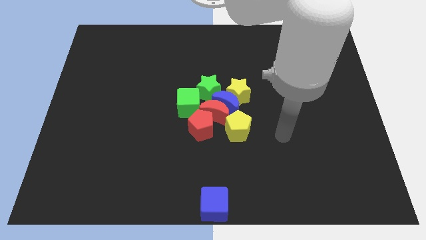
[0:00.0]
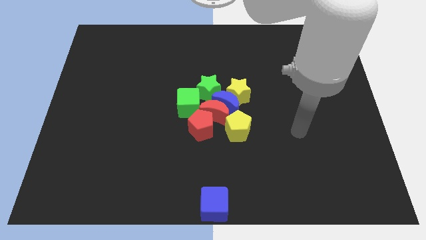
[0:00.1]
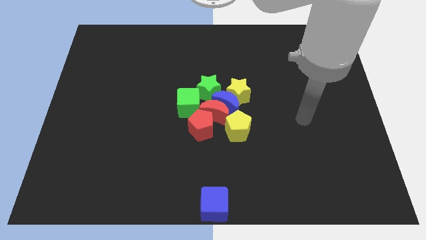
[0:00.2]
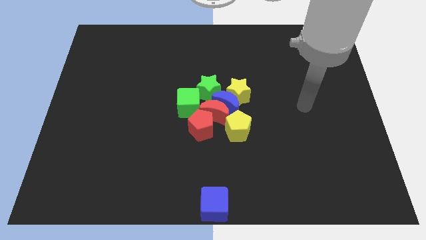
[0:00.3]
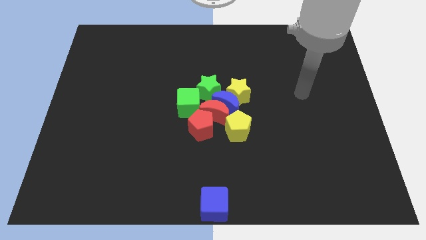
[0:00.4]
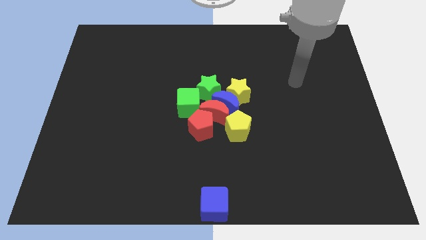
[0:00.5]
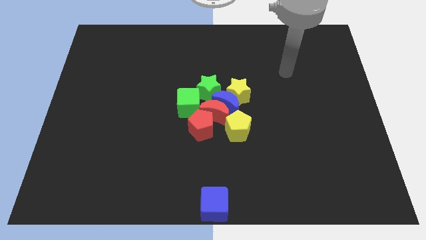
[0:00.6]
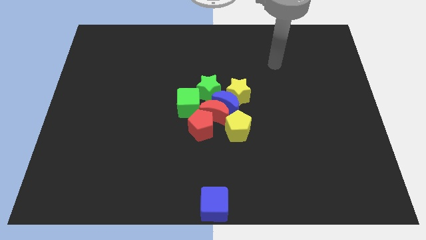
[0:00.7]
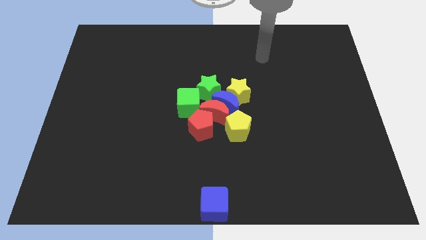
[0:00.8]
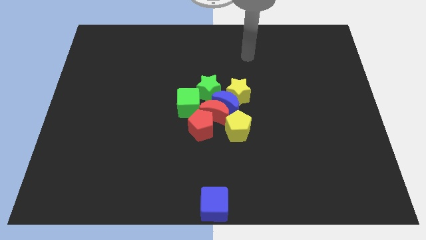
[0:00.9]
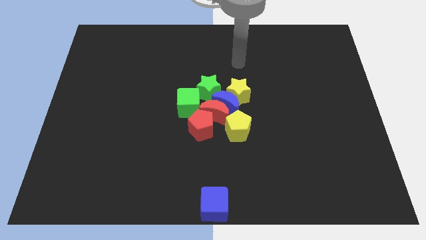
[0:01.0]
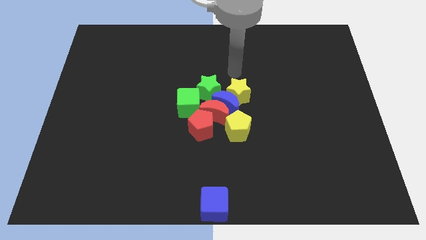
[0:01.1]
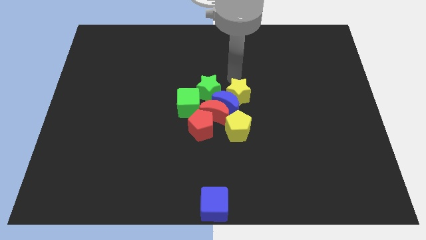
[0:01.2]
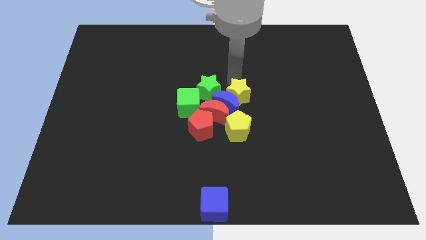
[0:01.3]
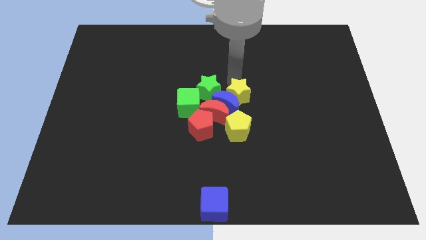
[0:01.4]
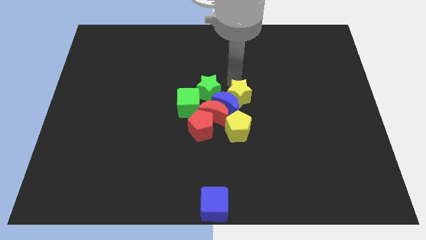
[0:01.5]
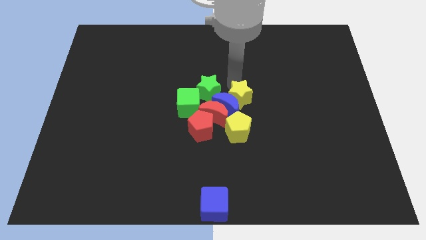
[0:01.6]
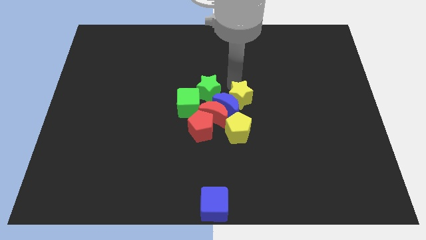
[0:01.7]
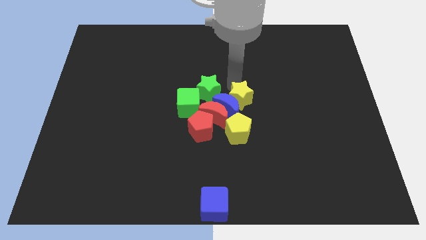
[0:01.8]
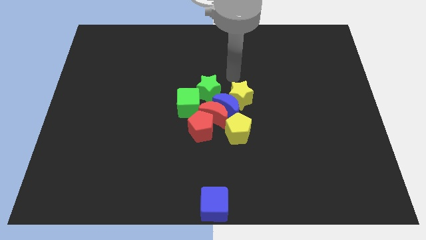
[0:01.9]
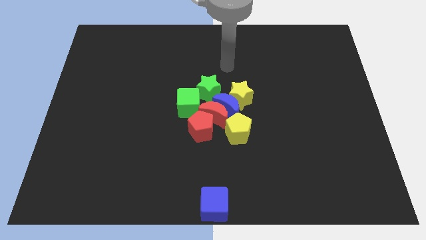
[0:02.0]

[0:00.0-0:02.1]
move the yellow star slightly to the down

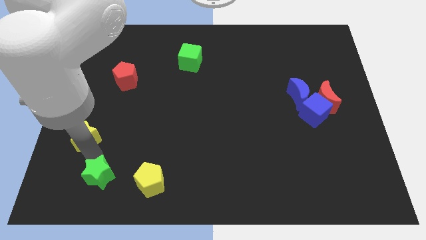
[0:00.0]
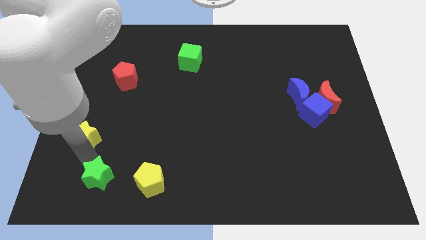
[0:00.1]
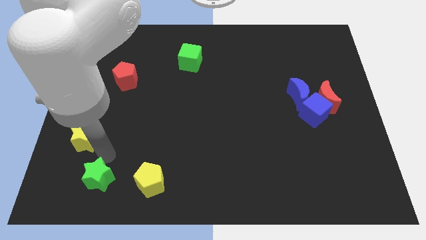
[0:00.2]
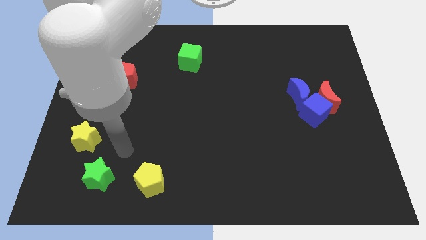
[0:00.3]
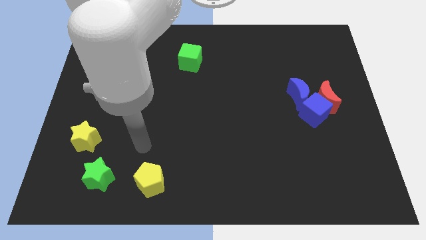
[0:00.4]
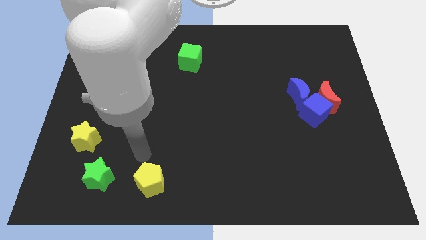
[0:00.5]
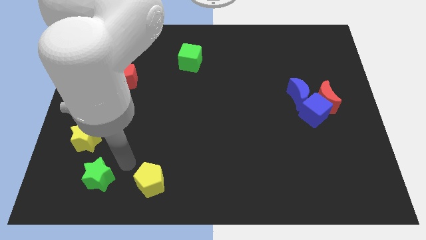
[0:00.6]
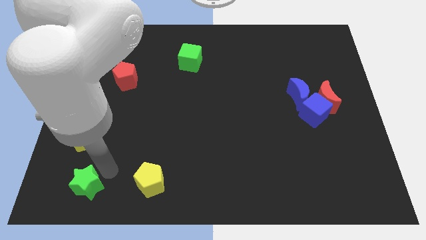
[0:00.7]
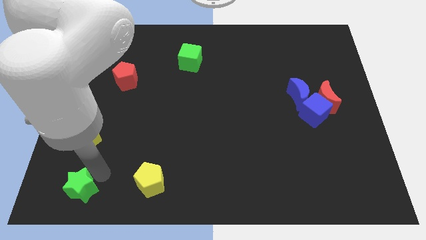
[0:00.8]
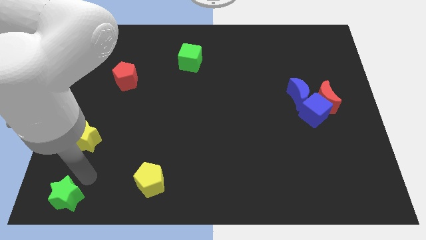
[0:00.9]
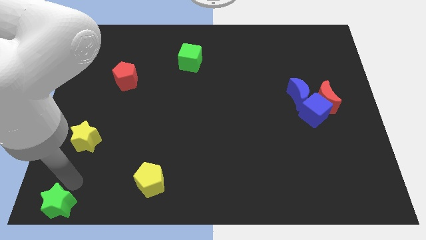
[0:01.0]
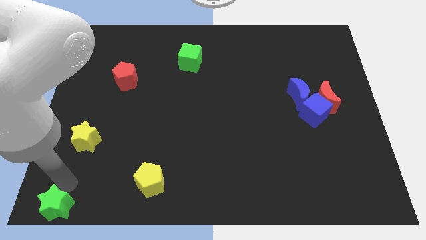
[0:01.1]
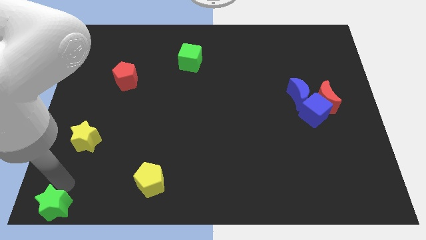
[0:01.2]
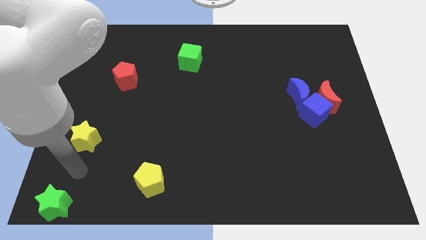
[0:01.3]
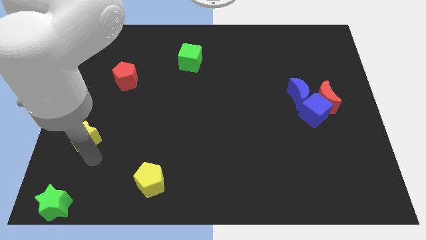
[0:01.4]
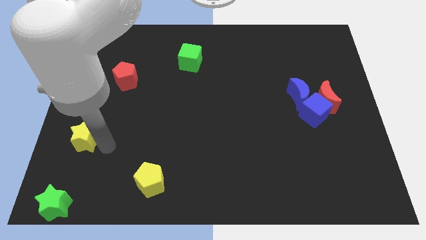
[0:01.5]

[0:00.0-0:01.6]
push the green star to the bottom left side

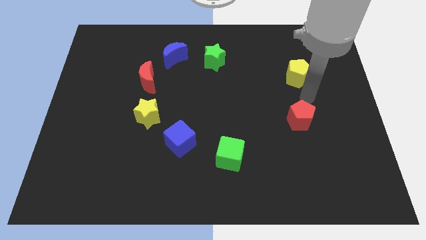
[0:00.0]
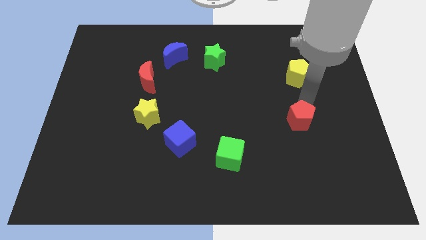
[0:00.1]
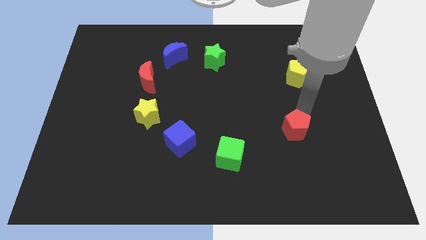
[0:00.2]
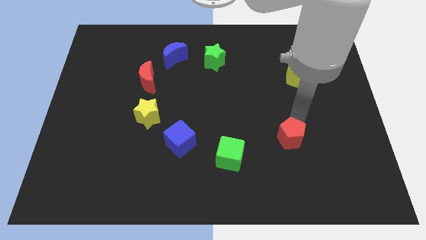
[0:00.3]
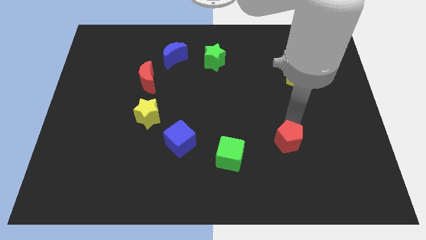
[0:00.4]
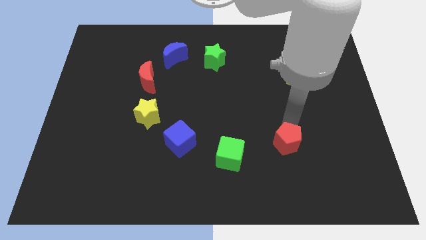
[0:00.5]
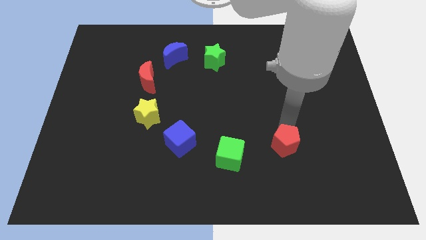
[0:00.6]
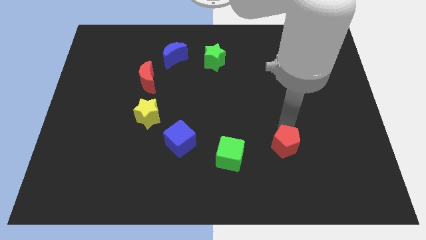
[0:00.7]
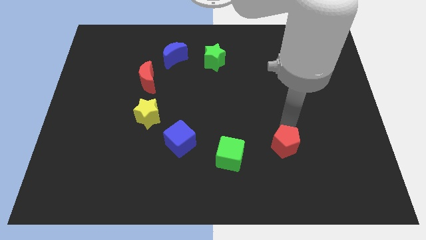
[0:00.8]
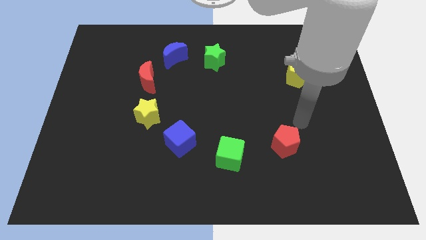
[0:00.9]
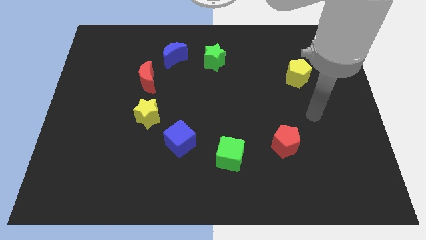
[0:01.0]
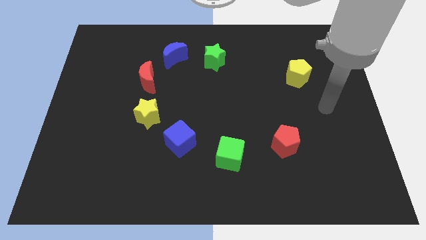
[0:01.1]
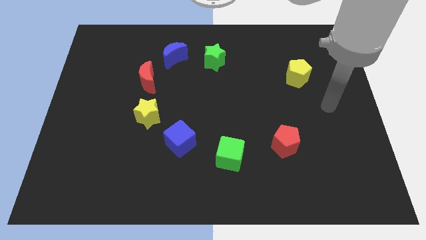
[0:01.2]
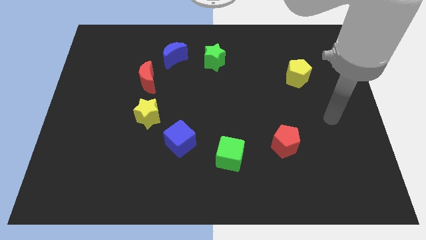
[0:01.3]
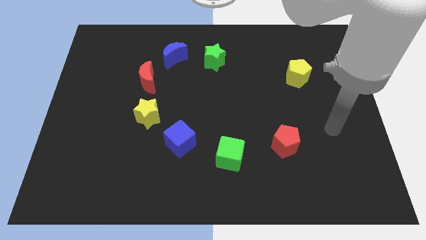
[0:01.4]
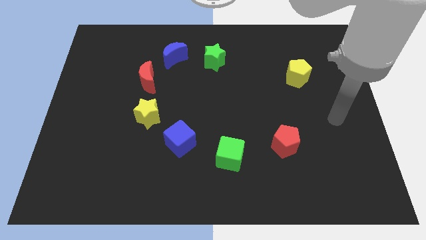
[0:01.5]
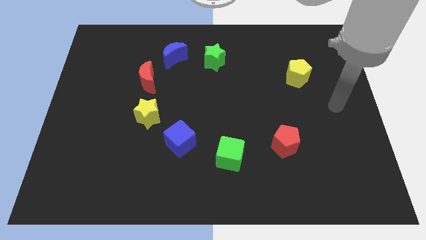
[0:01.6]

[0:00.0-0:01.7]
drag the red pentagon to the bottom side of the board

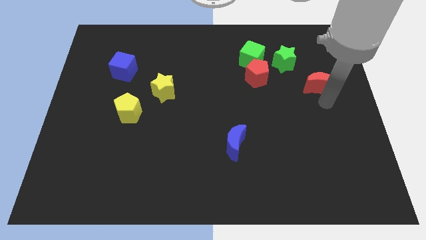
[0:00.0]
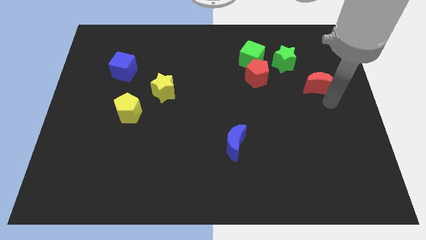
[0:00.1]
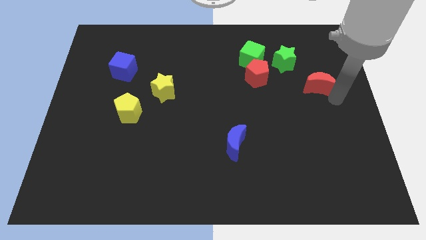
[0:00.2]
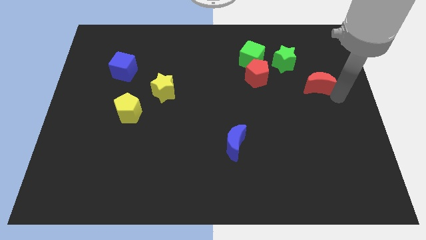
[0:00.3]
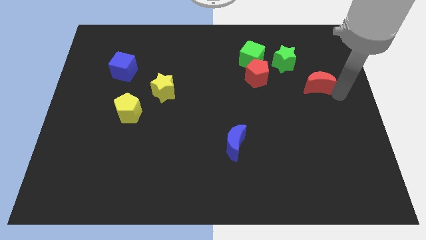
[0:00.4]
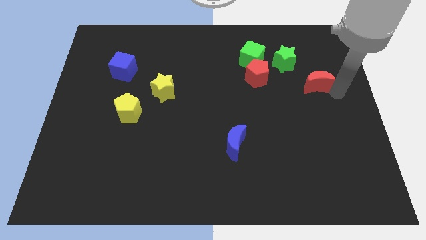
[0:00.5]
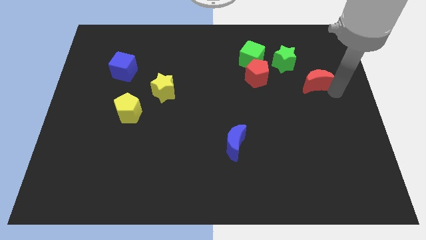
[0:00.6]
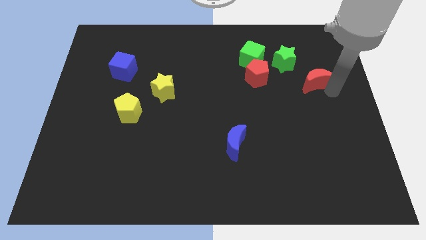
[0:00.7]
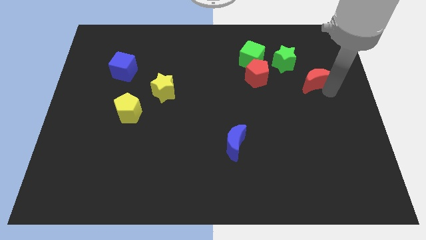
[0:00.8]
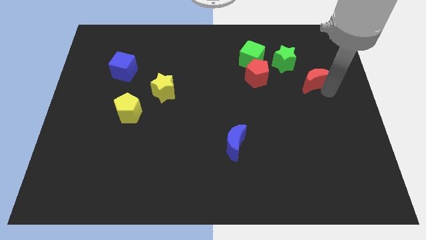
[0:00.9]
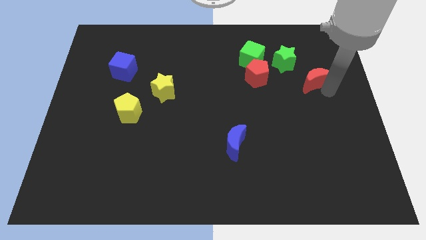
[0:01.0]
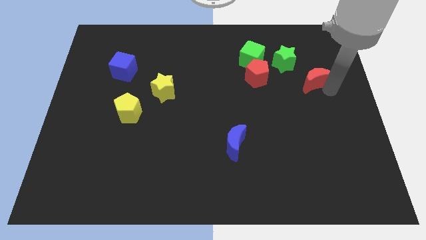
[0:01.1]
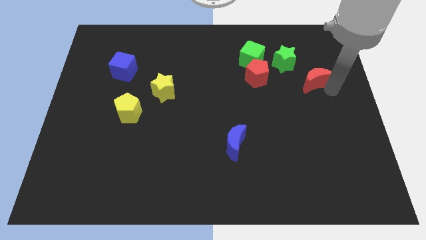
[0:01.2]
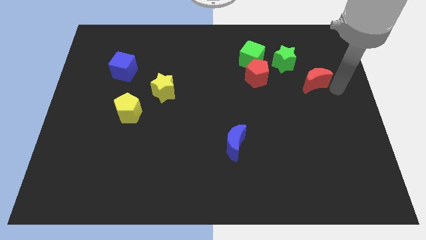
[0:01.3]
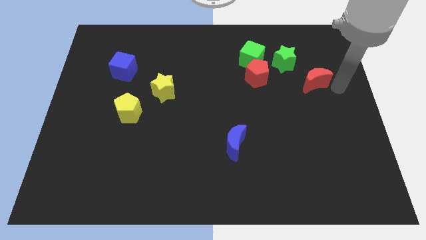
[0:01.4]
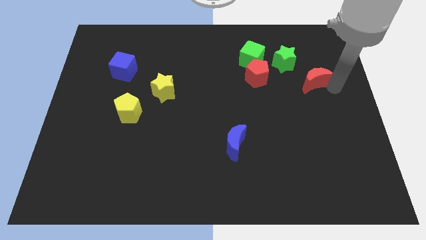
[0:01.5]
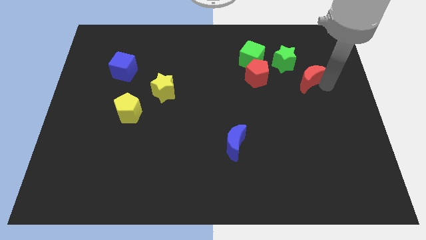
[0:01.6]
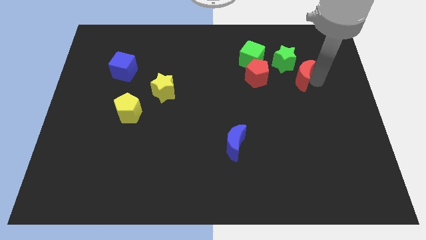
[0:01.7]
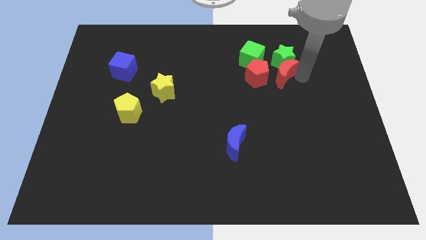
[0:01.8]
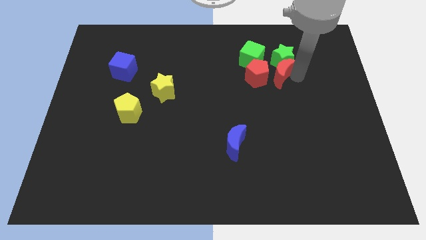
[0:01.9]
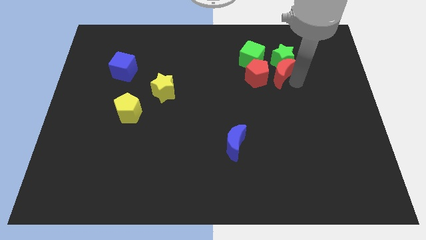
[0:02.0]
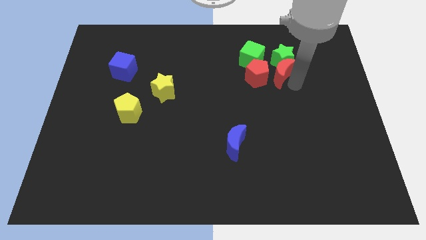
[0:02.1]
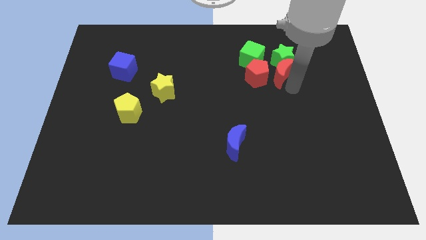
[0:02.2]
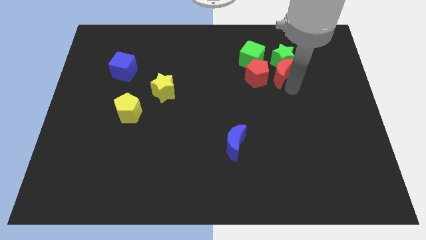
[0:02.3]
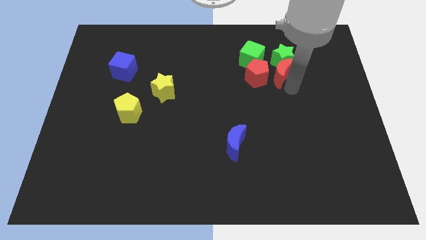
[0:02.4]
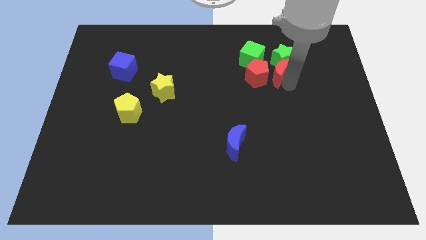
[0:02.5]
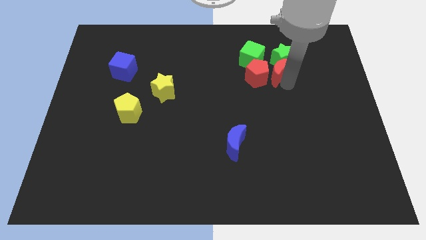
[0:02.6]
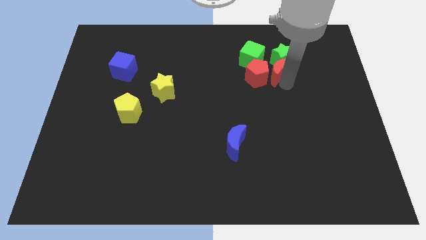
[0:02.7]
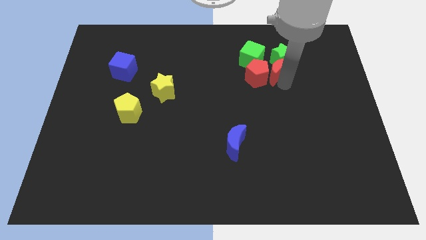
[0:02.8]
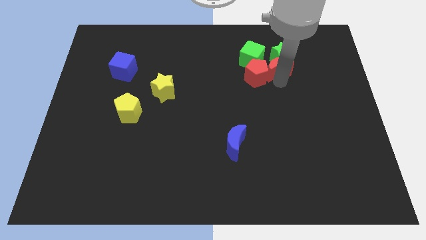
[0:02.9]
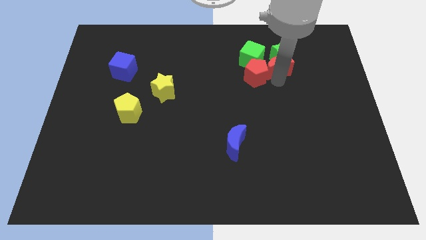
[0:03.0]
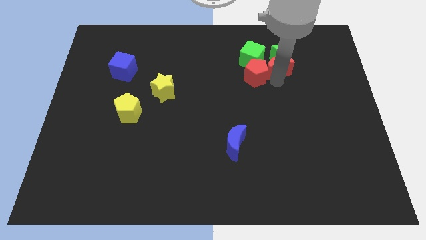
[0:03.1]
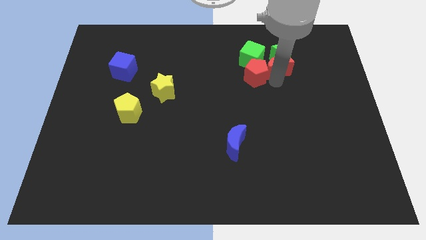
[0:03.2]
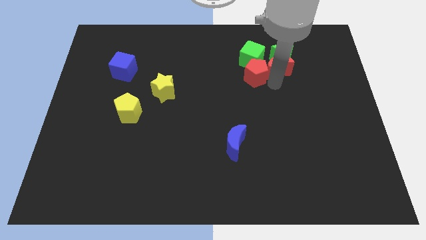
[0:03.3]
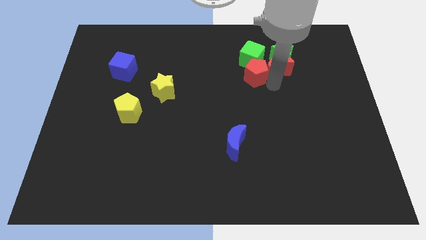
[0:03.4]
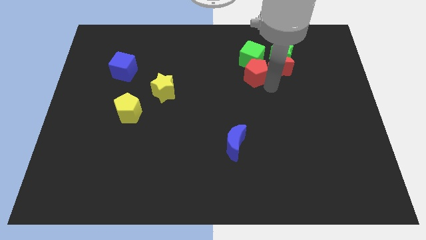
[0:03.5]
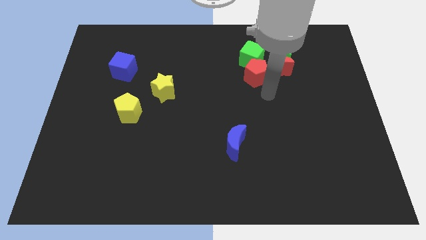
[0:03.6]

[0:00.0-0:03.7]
move the red crescent into the bottom of the green star
